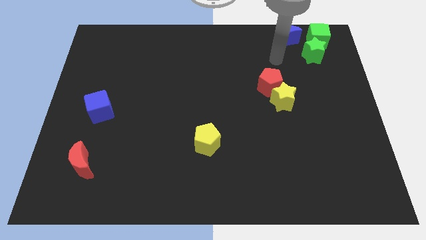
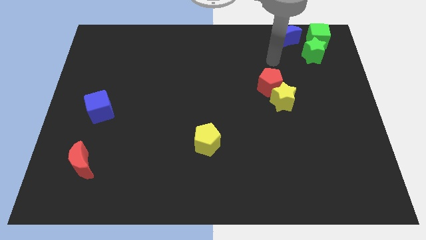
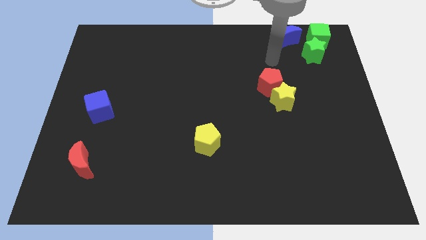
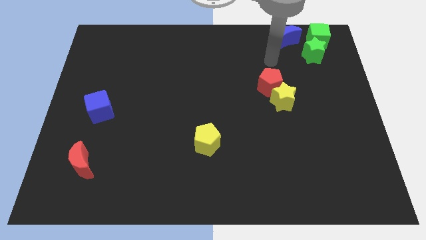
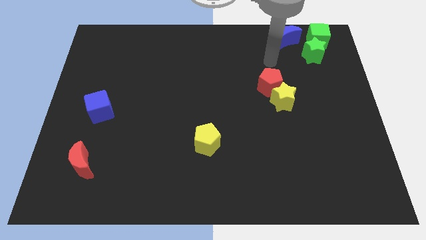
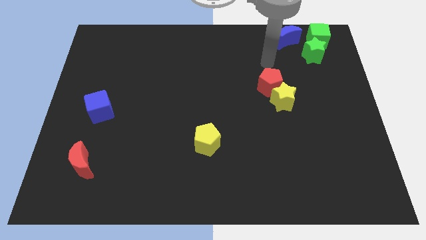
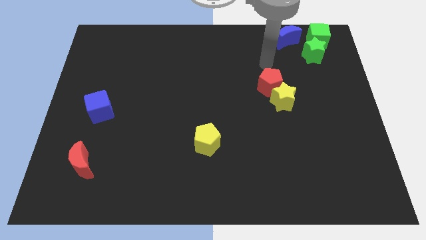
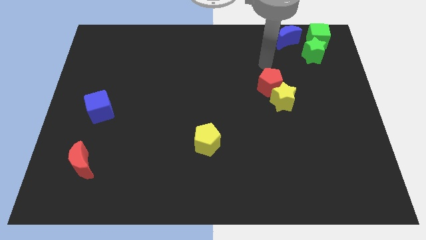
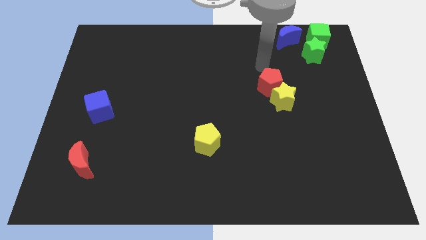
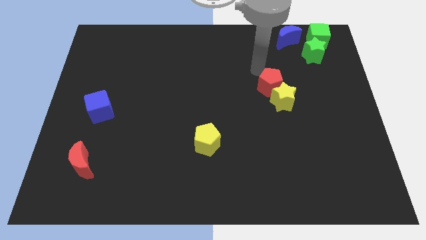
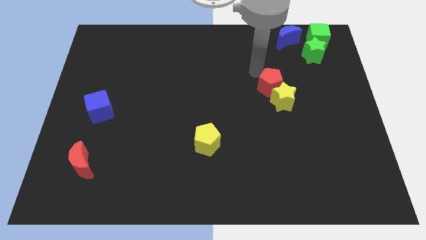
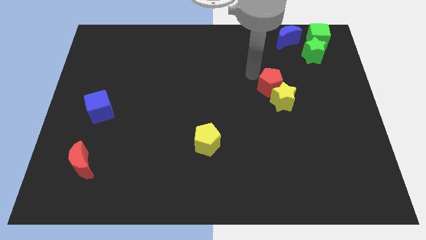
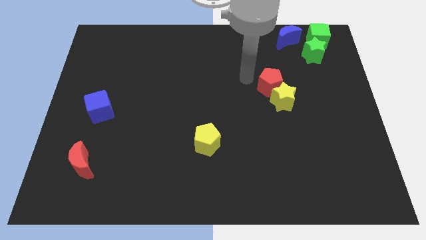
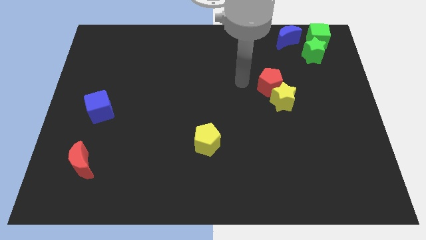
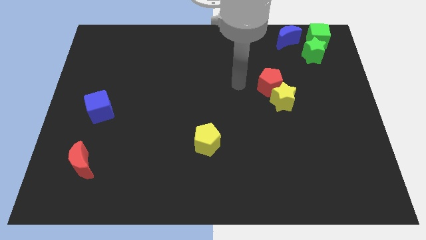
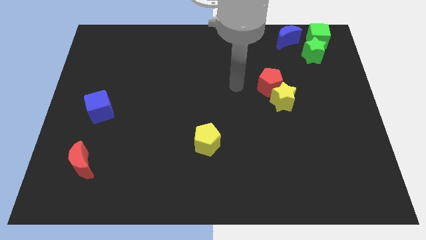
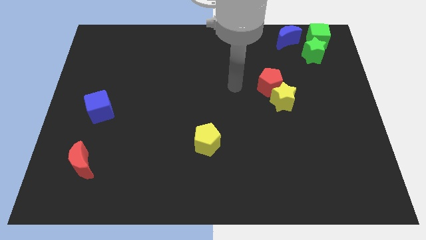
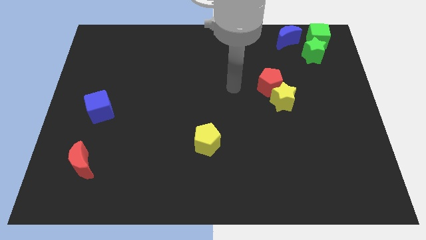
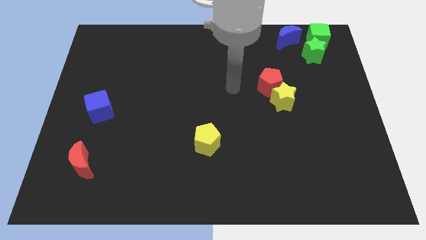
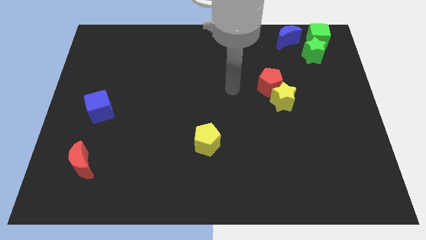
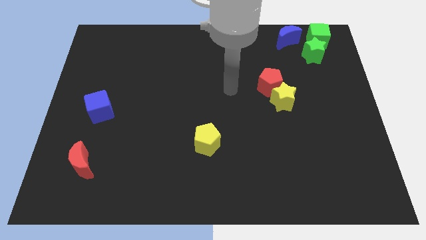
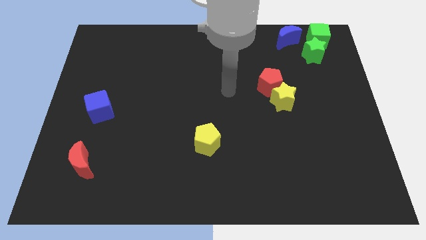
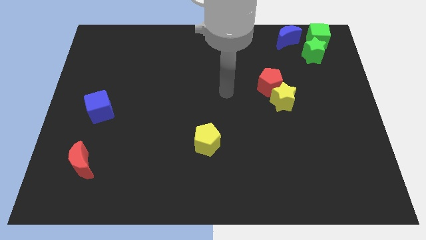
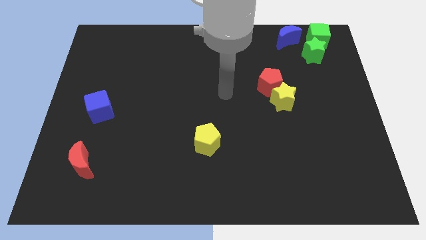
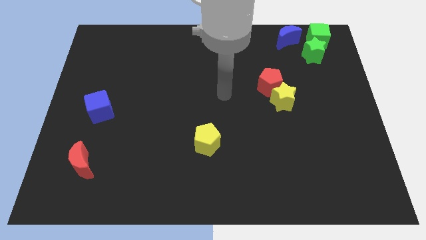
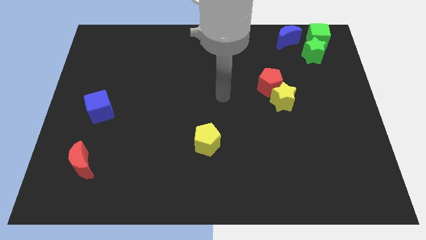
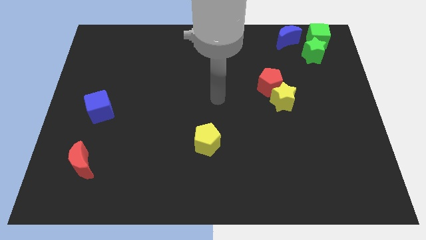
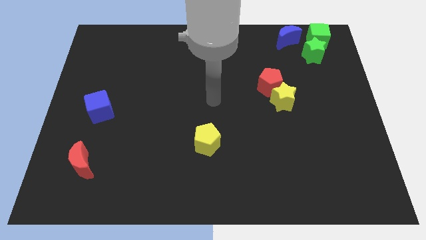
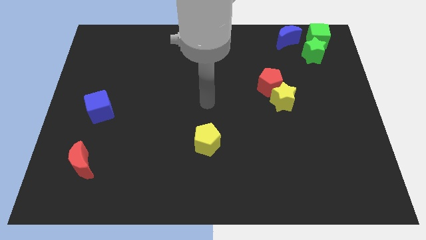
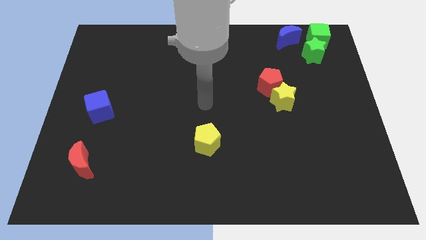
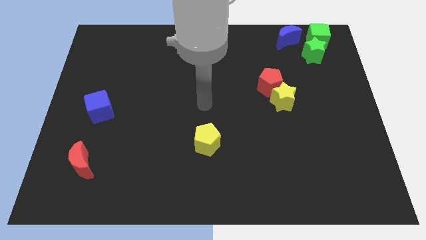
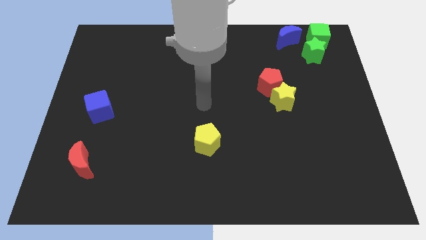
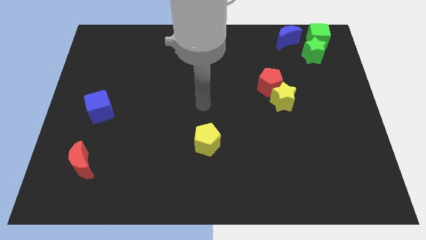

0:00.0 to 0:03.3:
move the arm towards the centre of the board

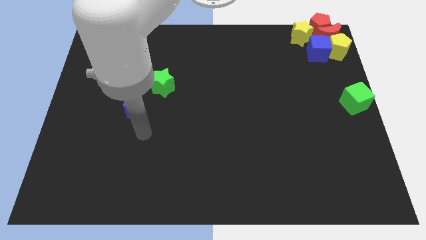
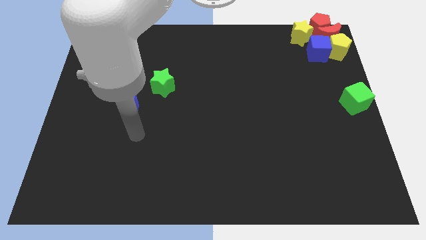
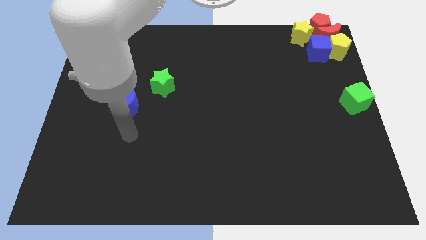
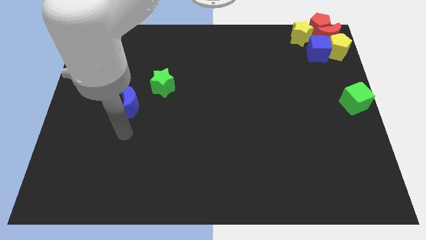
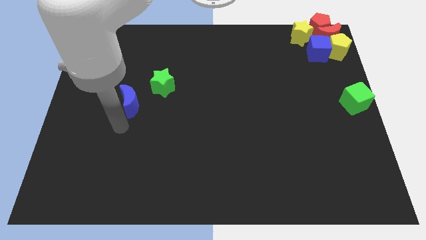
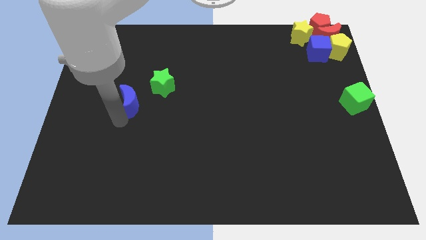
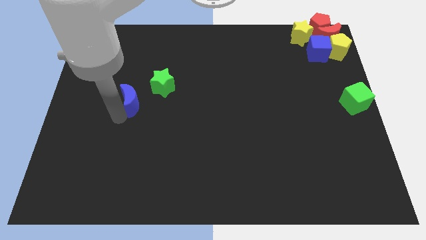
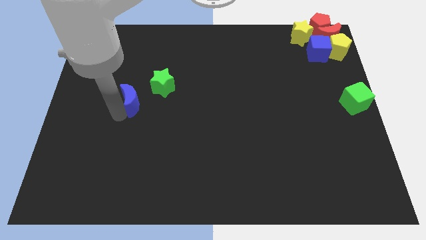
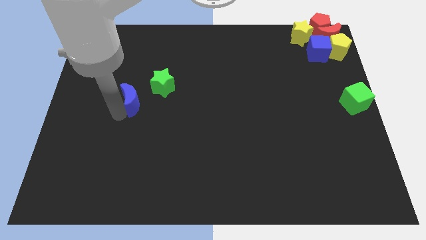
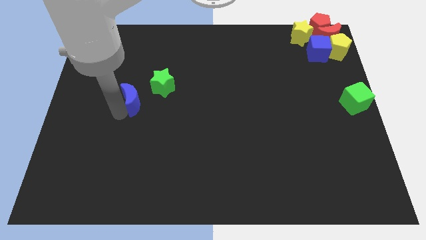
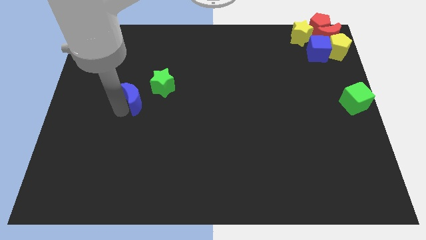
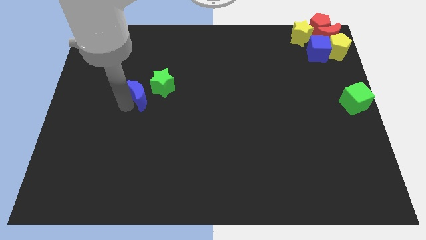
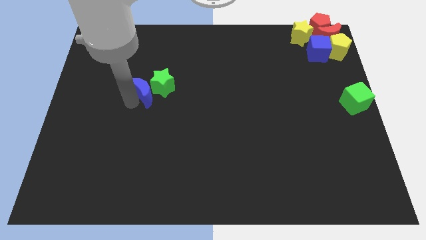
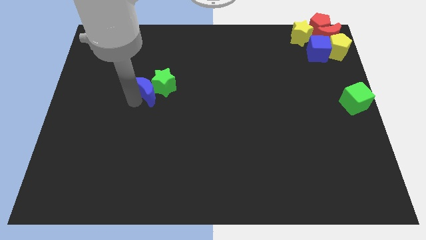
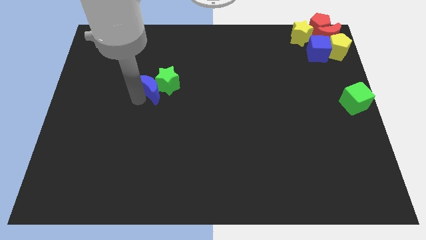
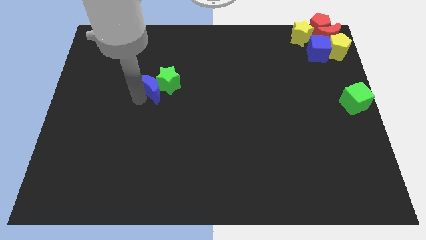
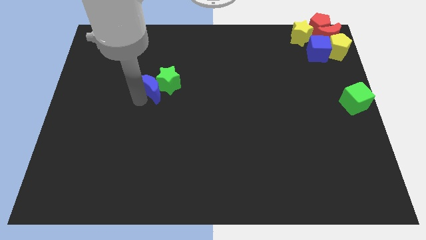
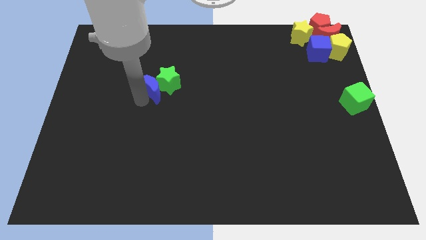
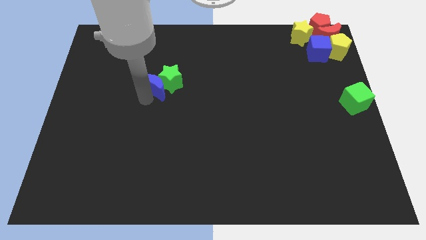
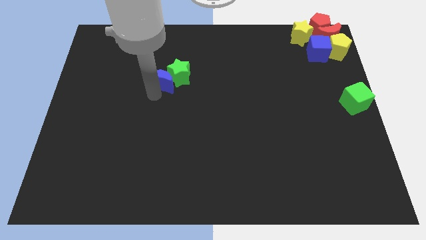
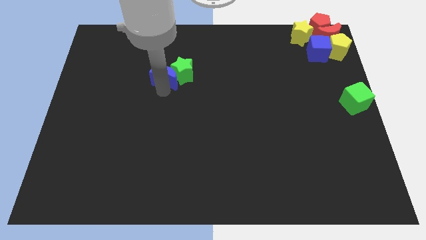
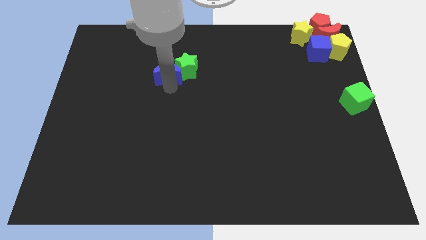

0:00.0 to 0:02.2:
slide the blue moon into the green star

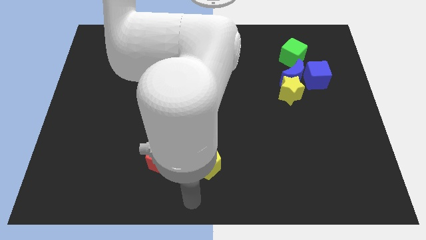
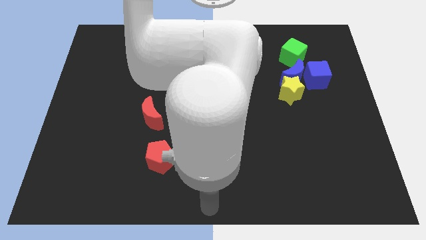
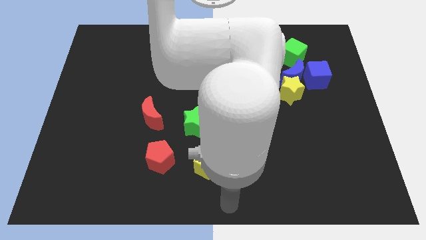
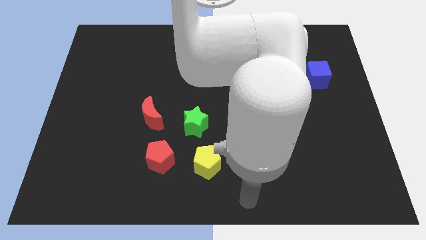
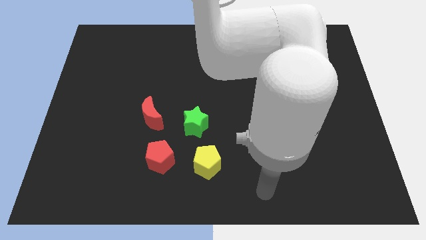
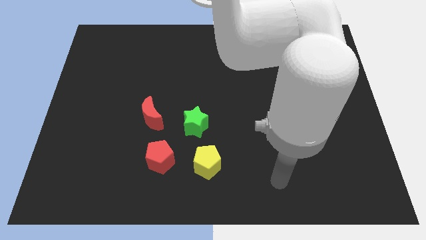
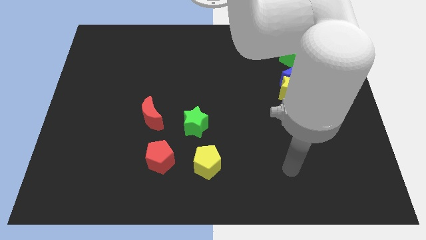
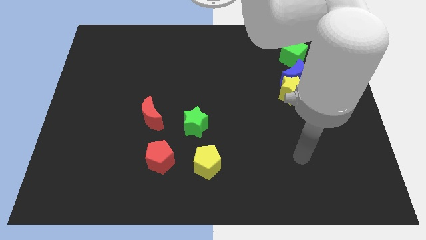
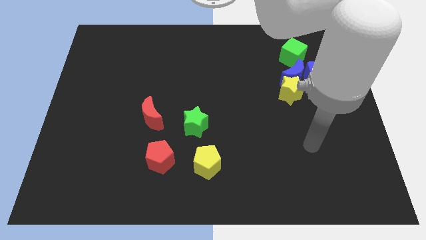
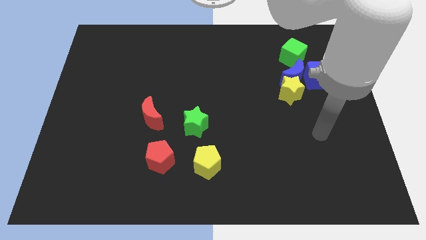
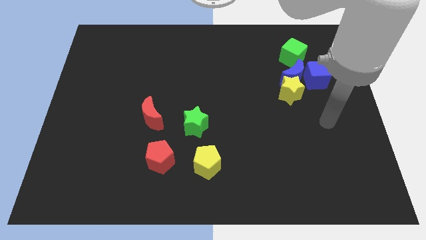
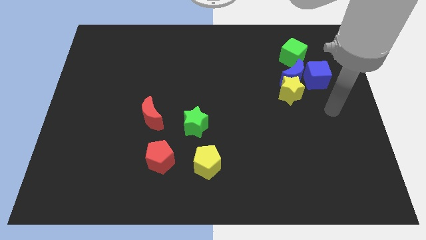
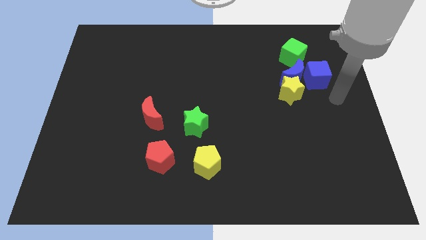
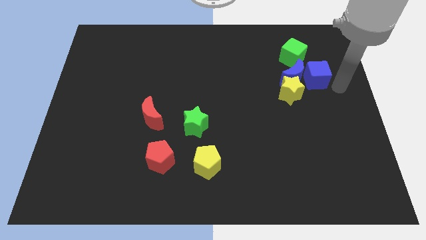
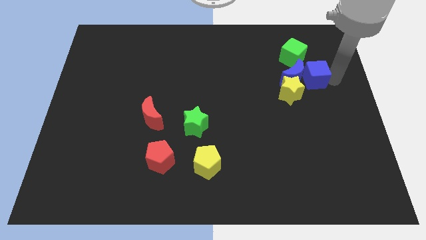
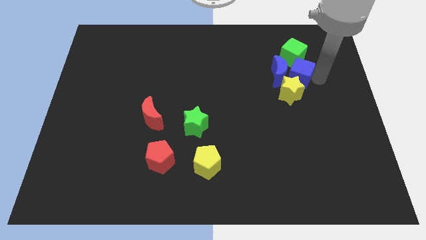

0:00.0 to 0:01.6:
go near blue cube

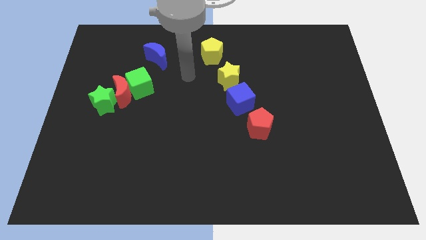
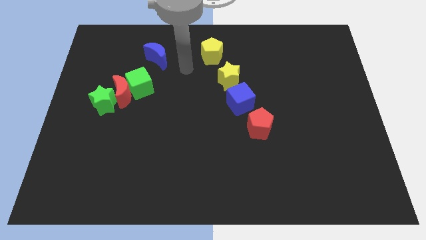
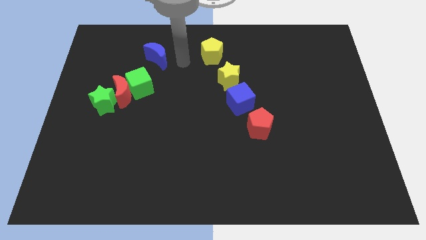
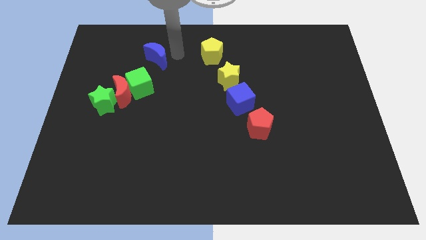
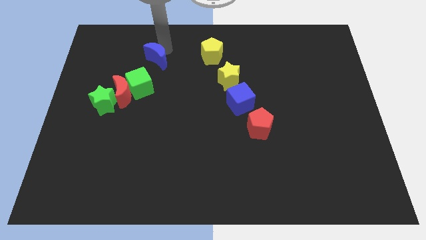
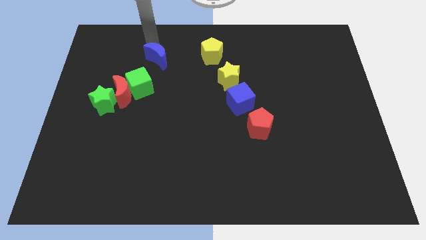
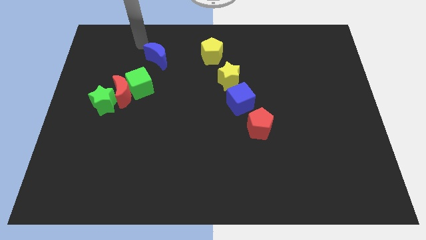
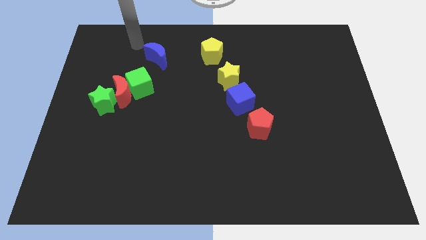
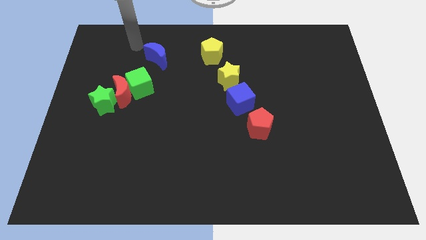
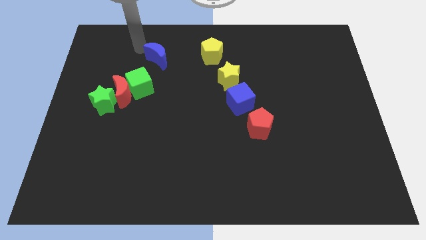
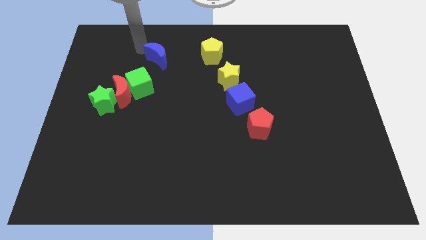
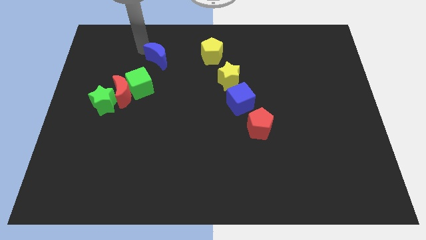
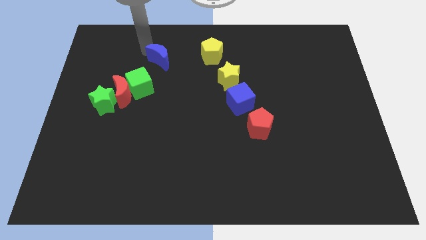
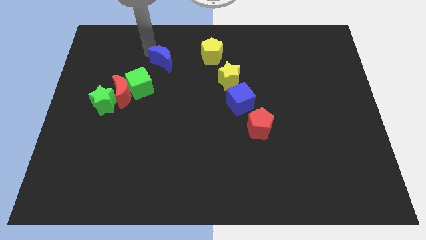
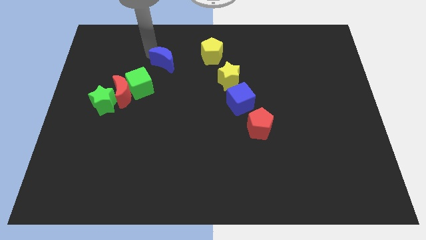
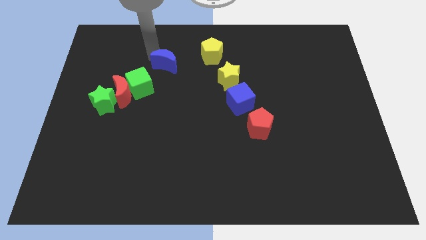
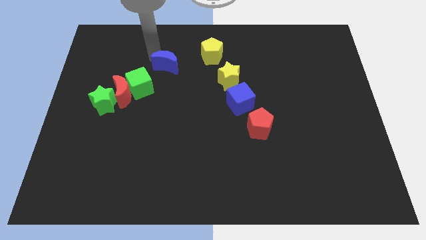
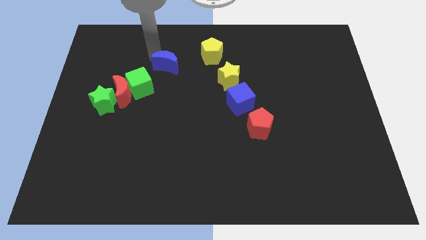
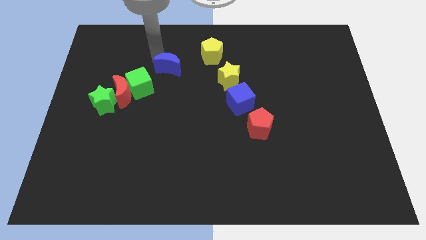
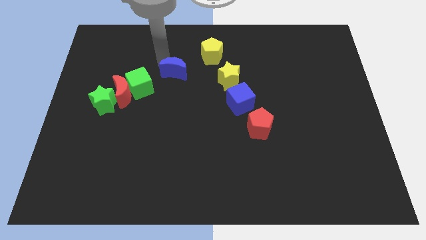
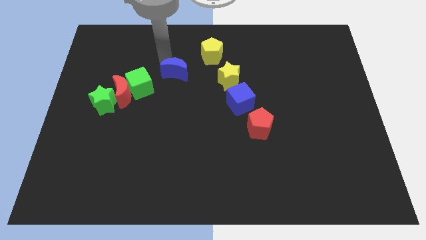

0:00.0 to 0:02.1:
move the blue crescent towards the bottom
